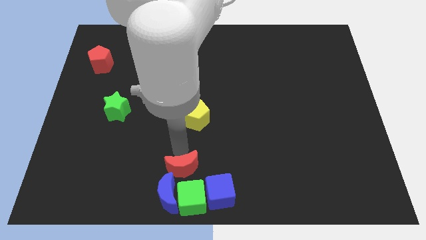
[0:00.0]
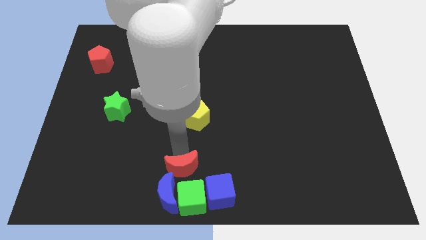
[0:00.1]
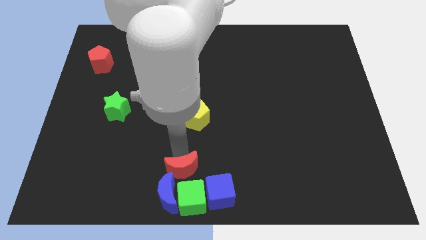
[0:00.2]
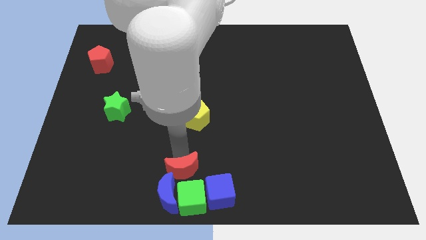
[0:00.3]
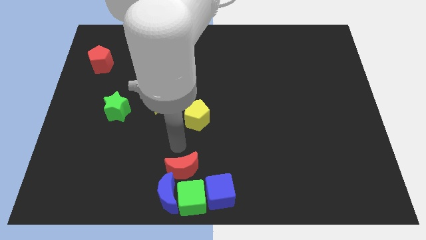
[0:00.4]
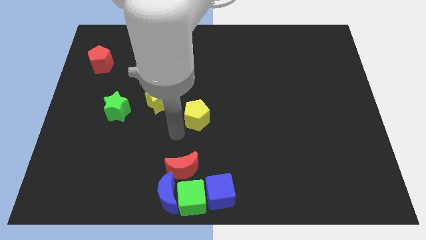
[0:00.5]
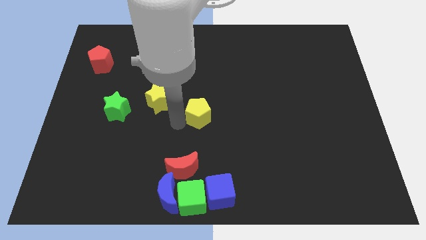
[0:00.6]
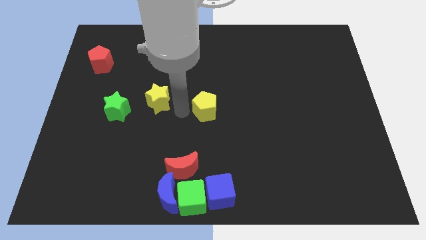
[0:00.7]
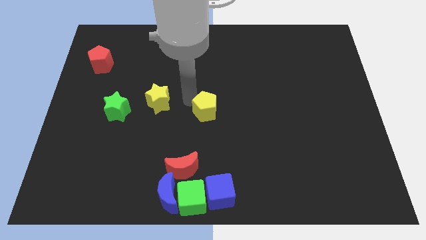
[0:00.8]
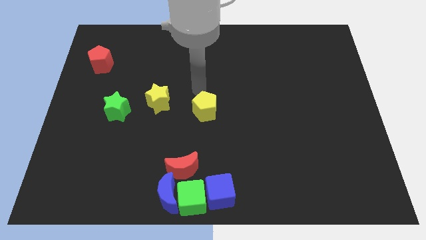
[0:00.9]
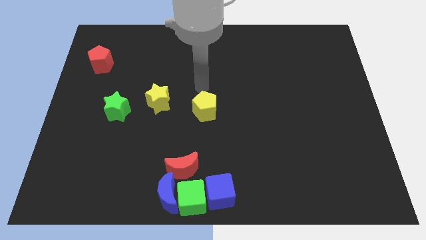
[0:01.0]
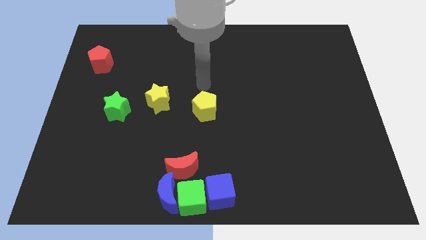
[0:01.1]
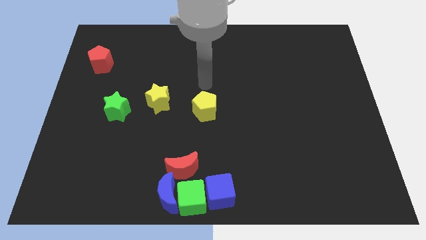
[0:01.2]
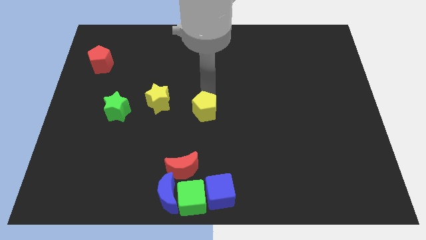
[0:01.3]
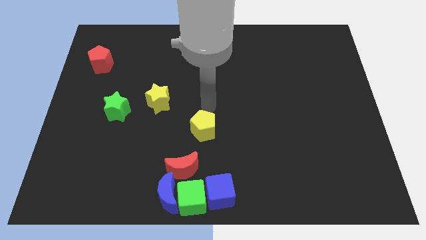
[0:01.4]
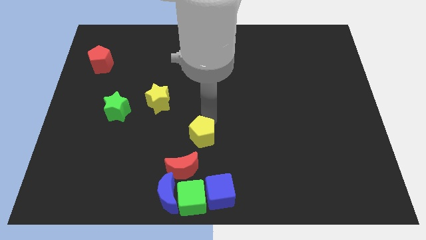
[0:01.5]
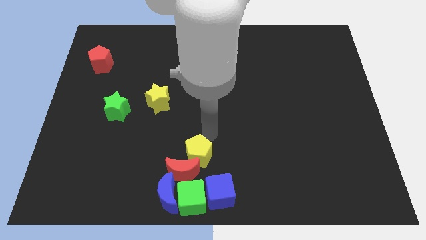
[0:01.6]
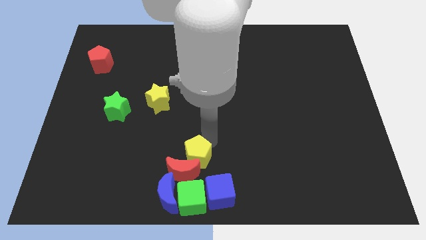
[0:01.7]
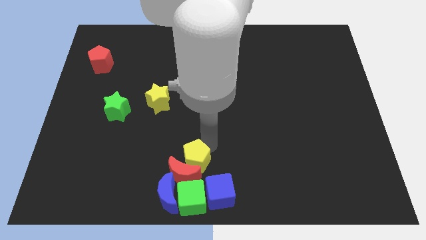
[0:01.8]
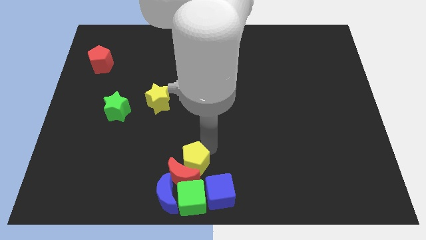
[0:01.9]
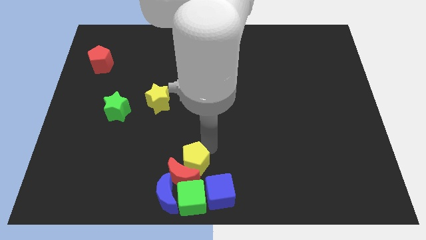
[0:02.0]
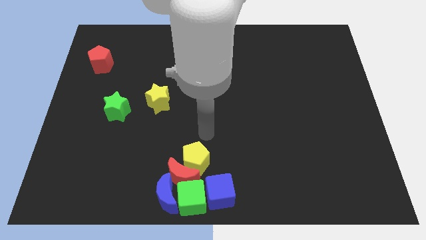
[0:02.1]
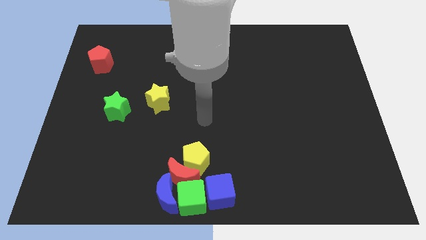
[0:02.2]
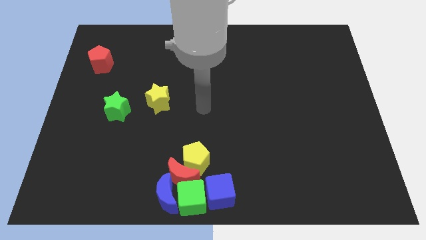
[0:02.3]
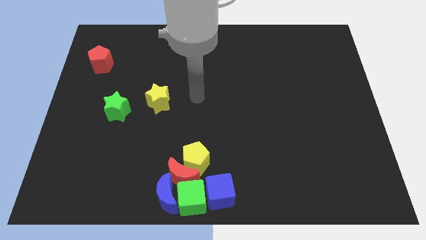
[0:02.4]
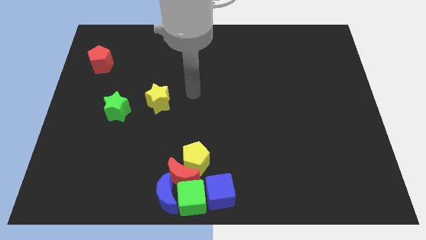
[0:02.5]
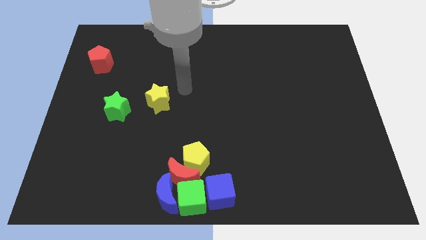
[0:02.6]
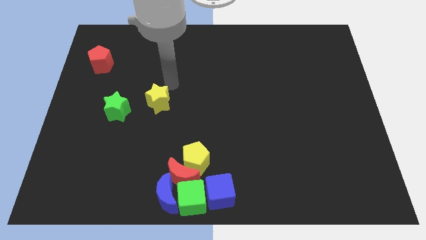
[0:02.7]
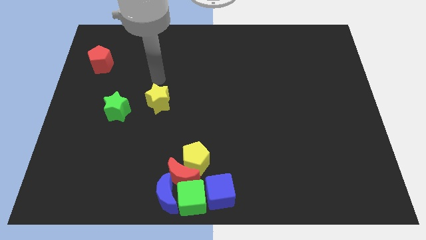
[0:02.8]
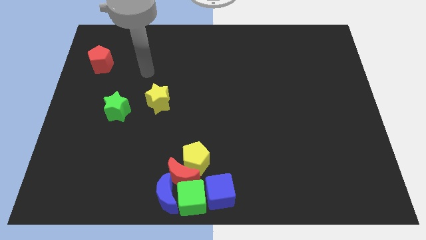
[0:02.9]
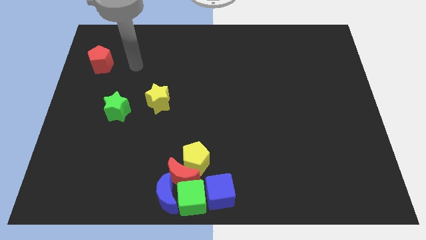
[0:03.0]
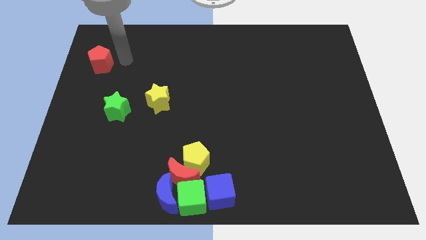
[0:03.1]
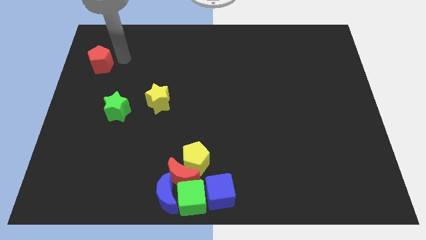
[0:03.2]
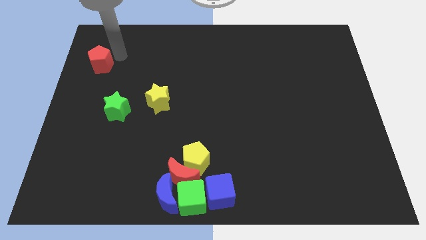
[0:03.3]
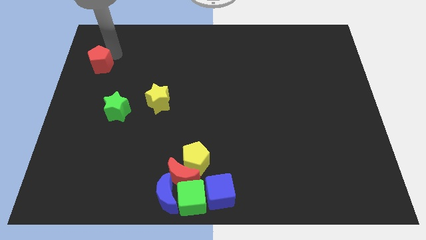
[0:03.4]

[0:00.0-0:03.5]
push the yellow pentagon into the red moon

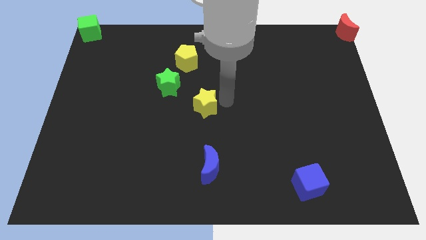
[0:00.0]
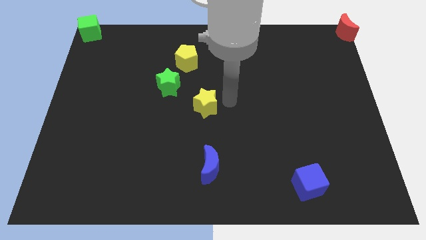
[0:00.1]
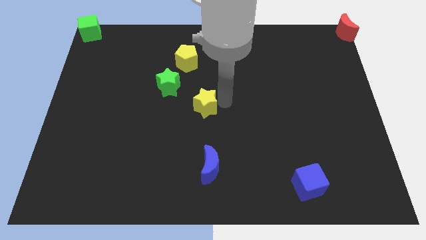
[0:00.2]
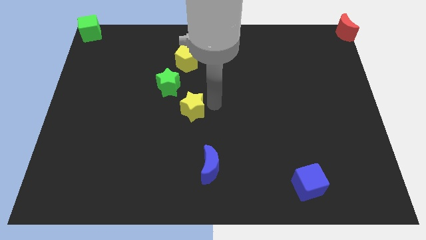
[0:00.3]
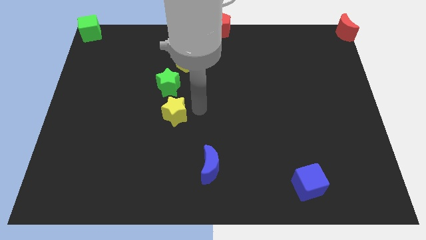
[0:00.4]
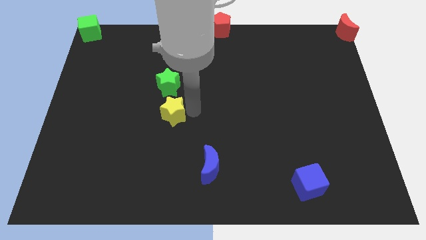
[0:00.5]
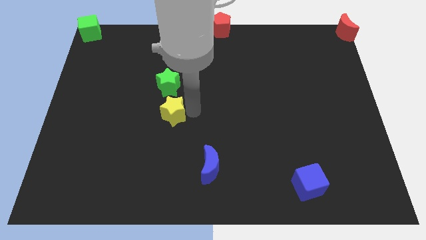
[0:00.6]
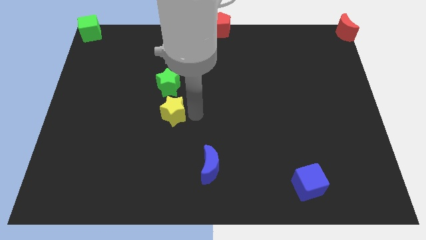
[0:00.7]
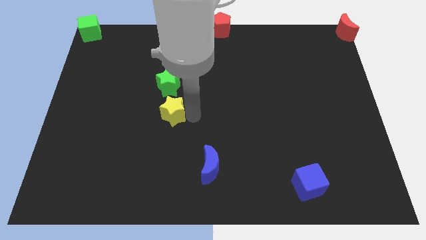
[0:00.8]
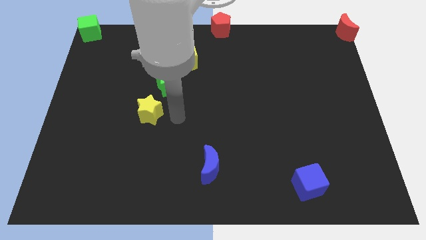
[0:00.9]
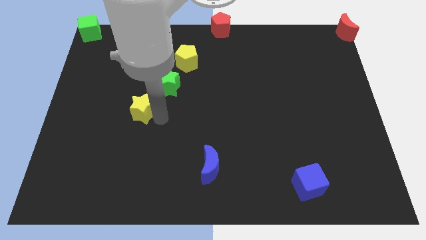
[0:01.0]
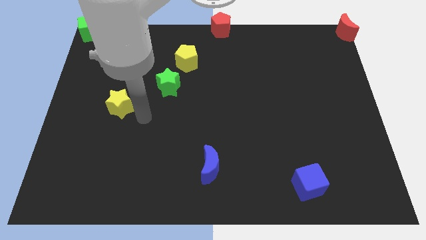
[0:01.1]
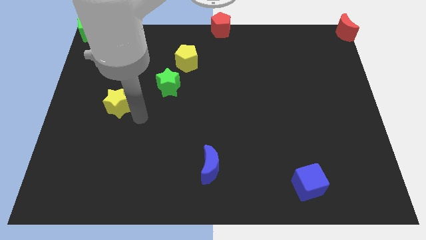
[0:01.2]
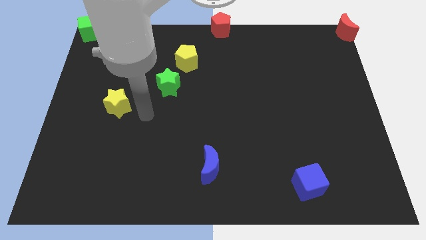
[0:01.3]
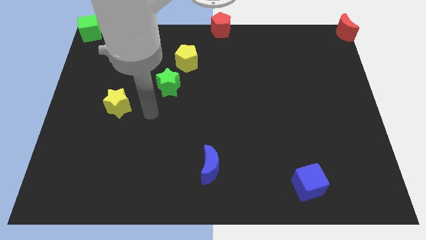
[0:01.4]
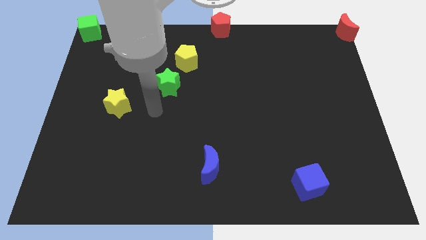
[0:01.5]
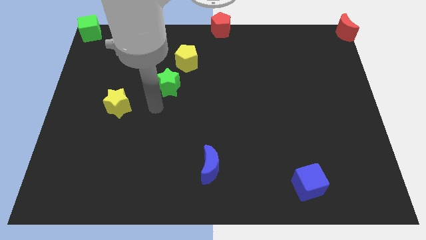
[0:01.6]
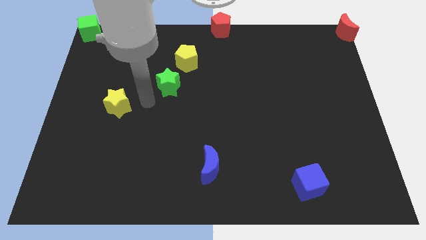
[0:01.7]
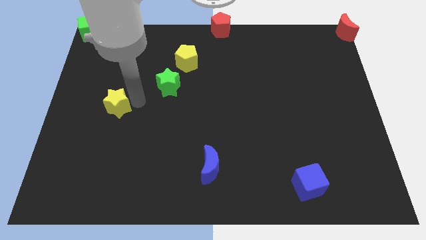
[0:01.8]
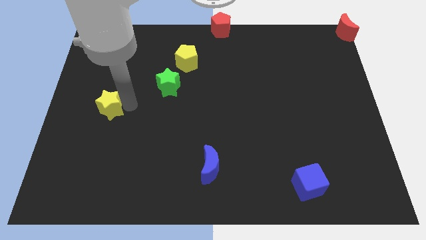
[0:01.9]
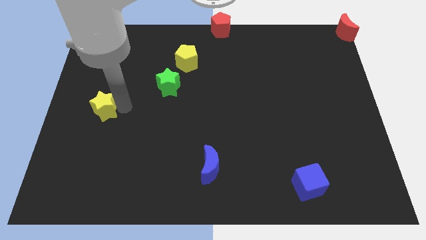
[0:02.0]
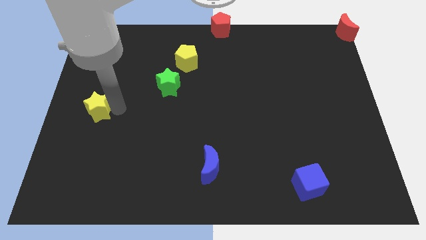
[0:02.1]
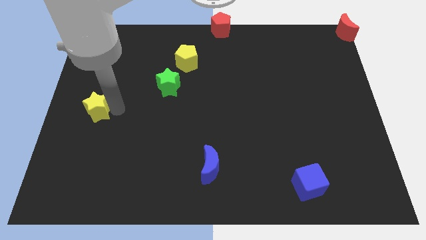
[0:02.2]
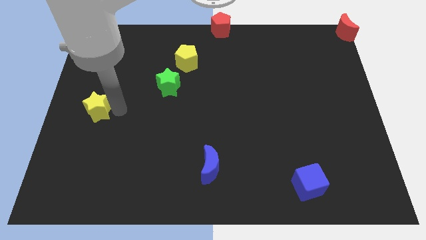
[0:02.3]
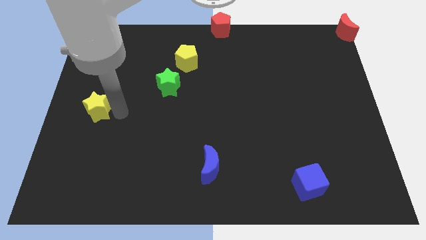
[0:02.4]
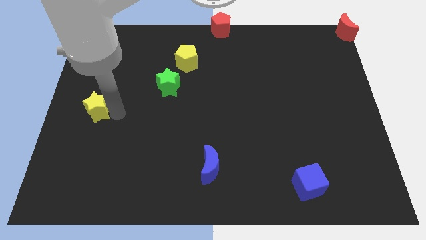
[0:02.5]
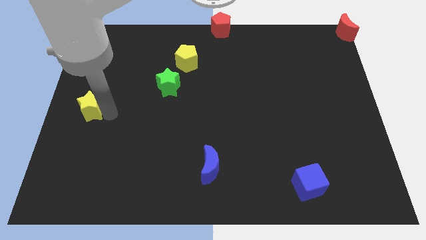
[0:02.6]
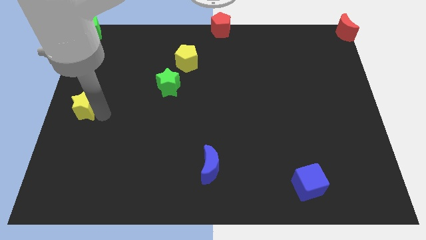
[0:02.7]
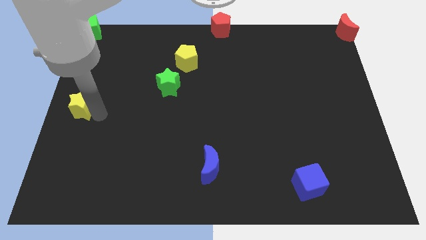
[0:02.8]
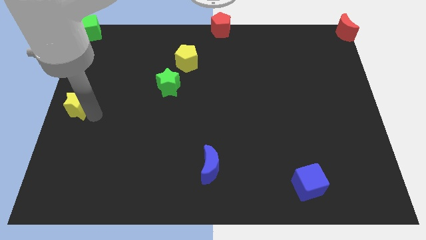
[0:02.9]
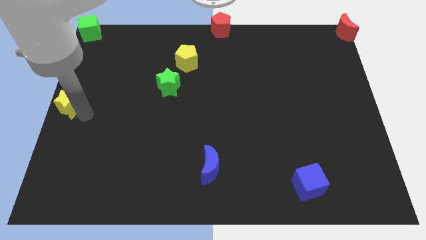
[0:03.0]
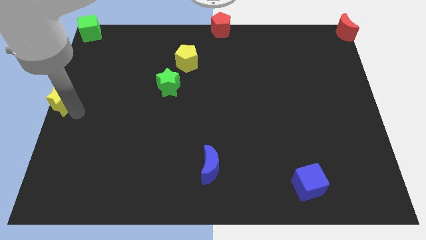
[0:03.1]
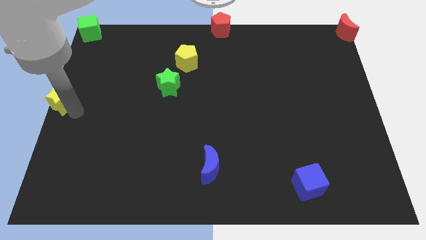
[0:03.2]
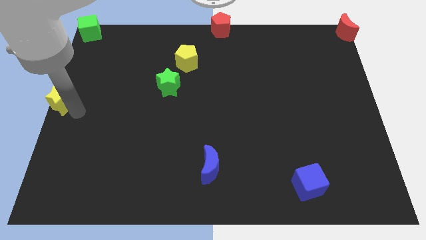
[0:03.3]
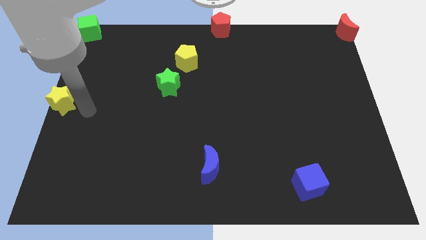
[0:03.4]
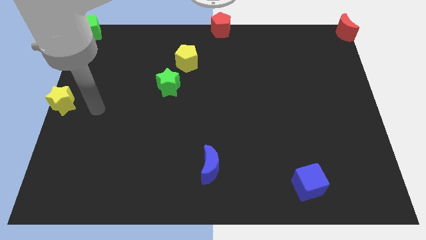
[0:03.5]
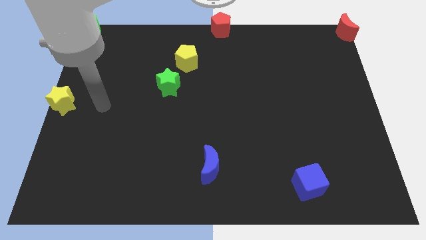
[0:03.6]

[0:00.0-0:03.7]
drag the yellow star to center left of the board

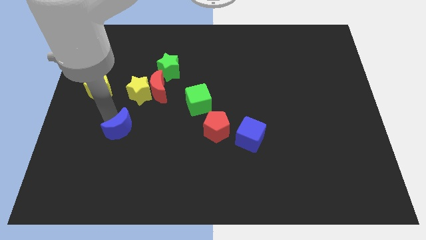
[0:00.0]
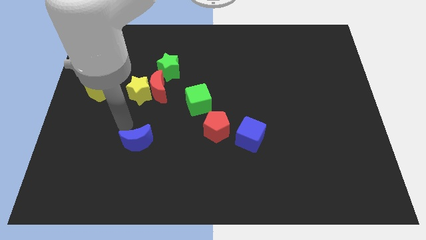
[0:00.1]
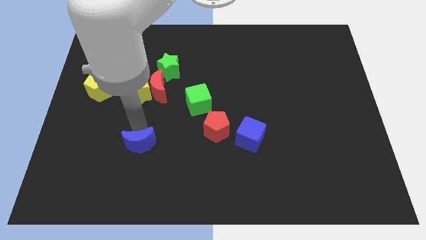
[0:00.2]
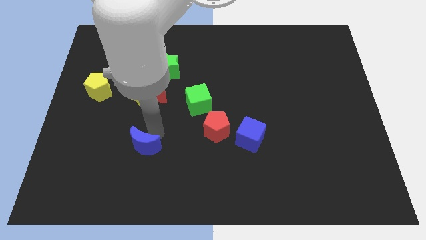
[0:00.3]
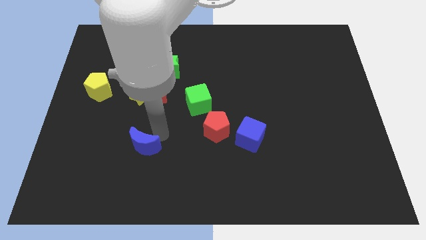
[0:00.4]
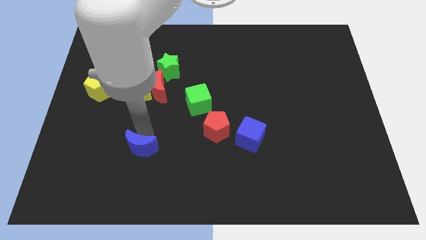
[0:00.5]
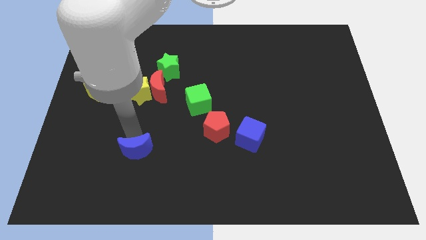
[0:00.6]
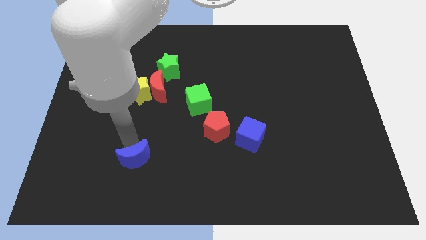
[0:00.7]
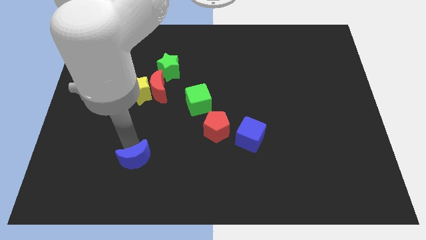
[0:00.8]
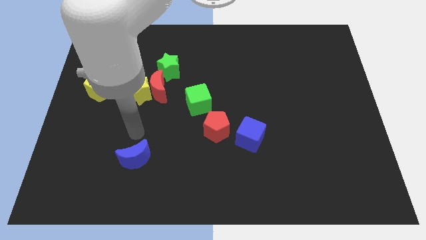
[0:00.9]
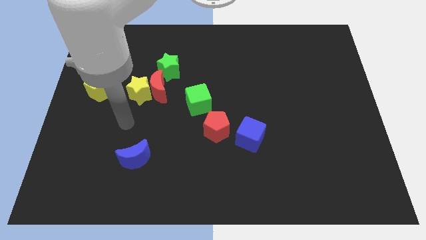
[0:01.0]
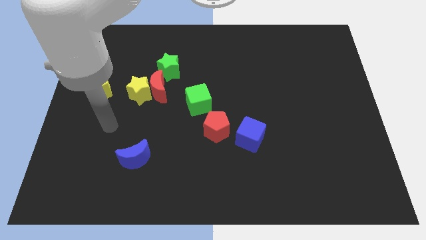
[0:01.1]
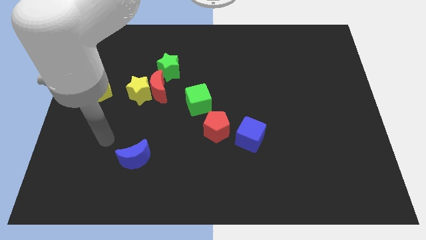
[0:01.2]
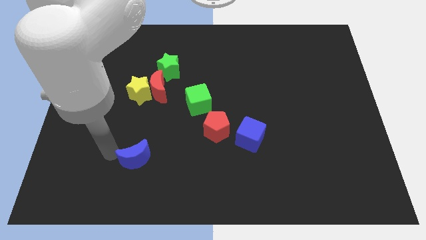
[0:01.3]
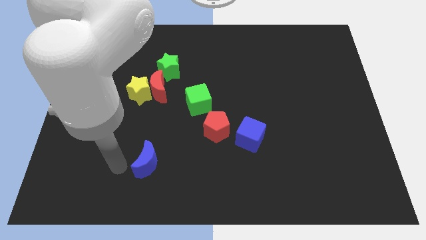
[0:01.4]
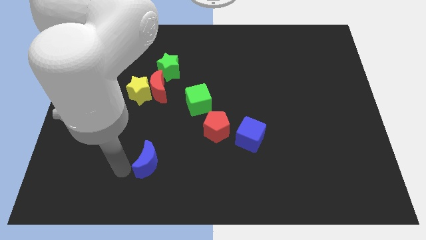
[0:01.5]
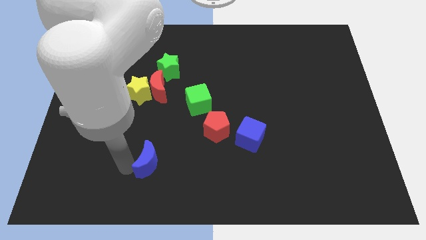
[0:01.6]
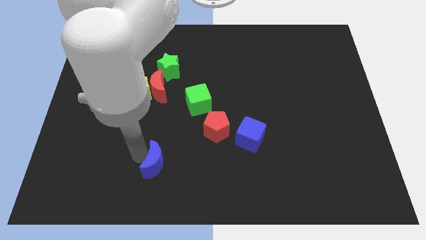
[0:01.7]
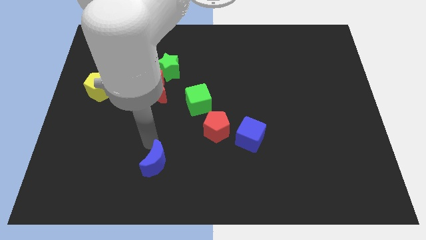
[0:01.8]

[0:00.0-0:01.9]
push blue moon diagonally downwards
